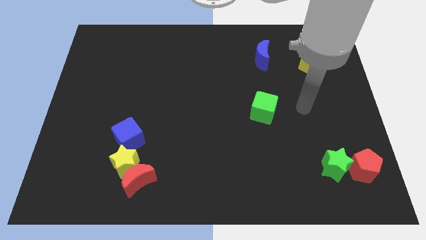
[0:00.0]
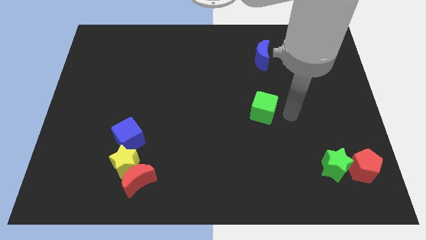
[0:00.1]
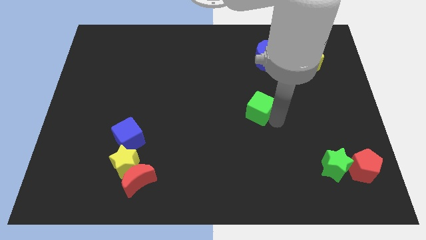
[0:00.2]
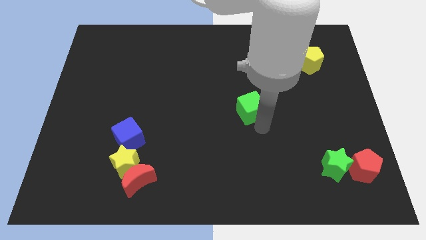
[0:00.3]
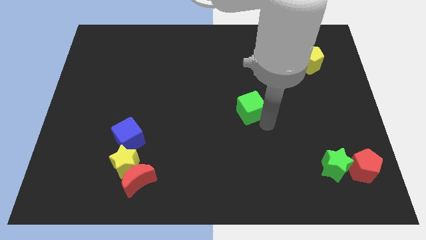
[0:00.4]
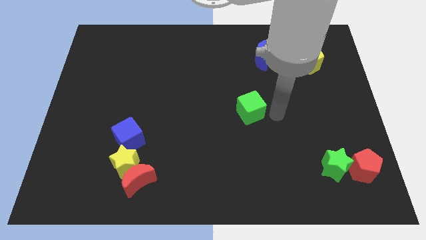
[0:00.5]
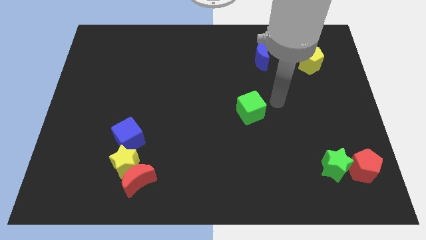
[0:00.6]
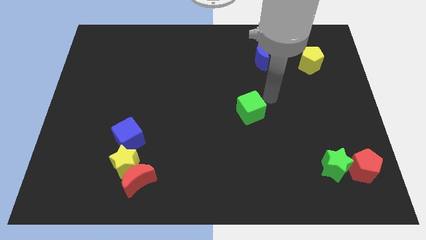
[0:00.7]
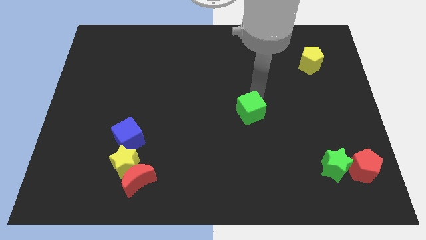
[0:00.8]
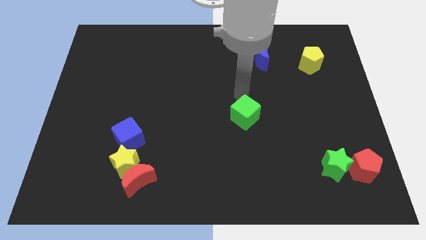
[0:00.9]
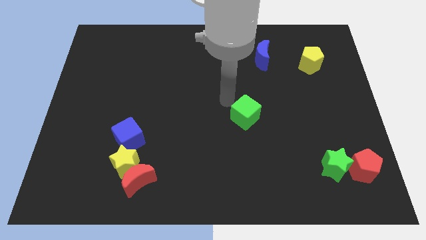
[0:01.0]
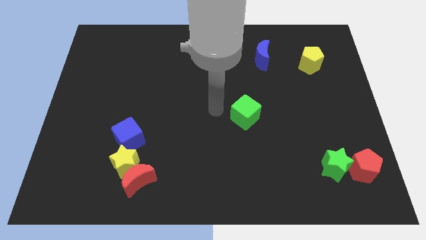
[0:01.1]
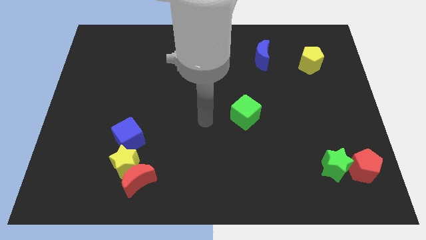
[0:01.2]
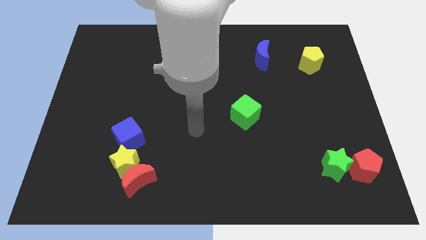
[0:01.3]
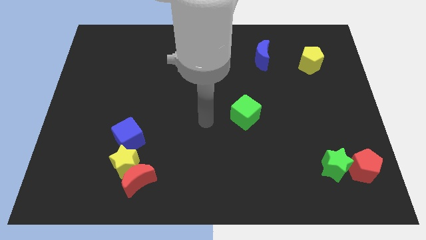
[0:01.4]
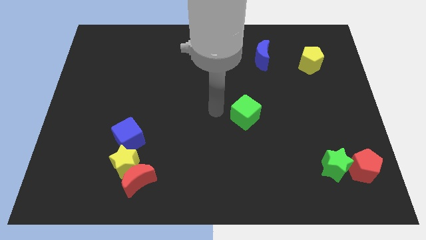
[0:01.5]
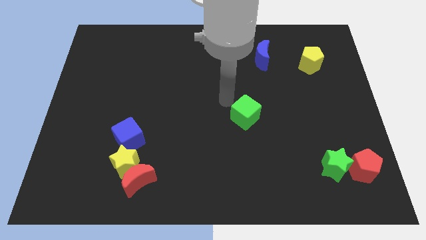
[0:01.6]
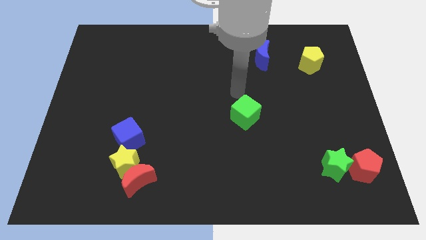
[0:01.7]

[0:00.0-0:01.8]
slide the green cube to the center of the board

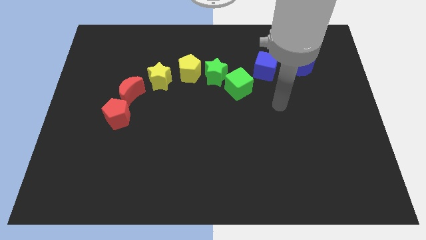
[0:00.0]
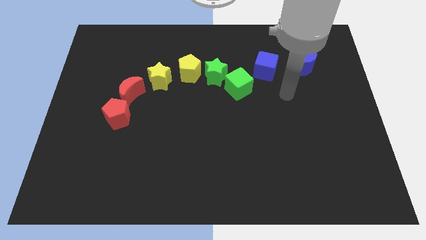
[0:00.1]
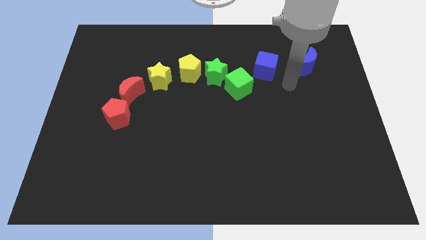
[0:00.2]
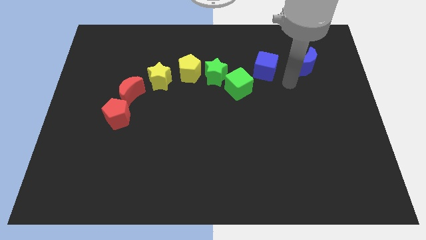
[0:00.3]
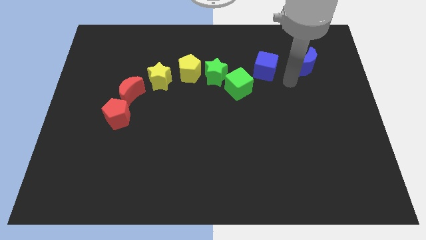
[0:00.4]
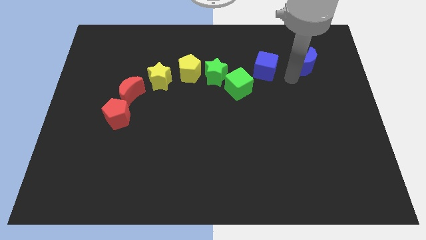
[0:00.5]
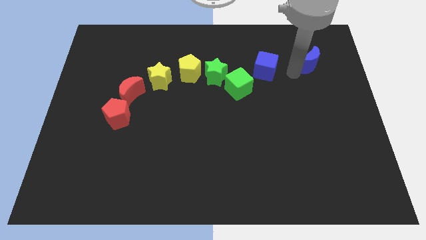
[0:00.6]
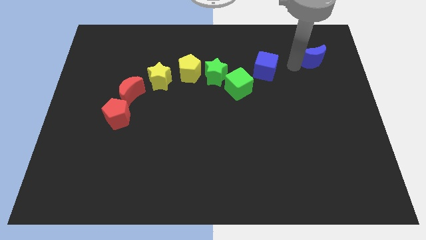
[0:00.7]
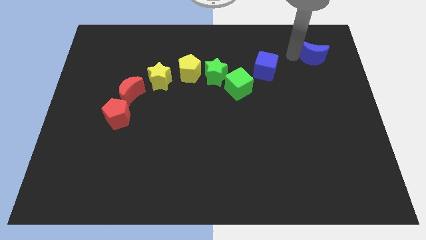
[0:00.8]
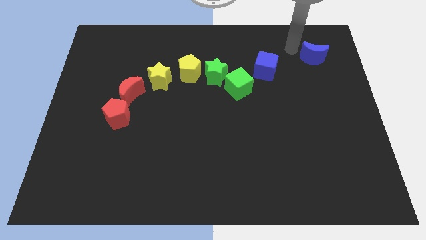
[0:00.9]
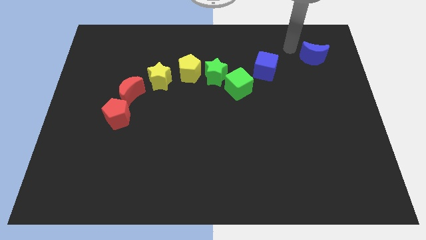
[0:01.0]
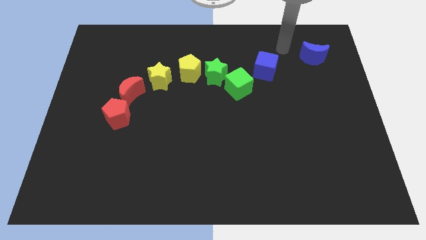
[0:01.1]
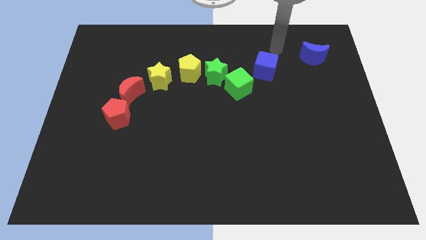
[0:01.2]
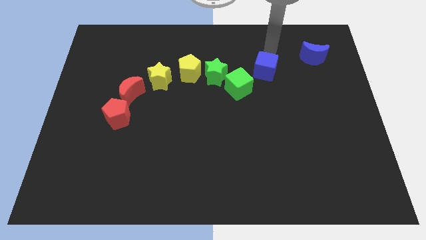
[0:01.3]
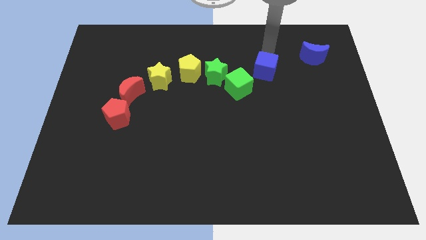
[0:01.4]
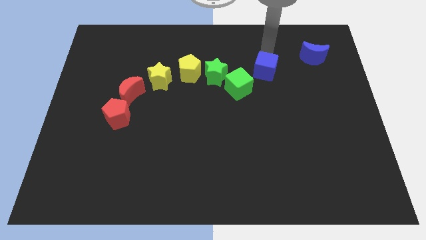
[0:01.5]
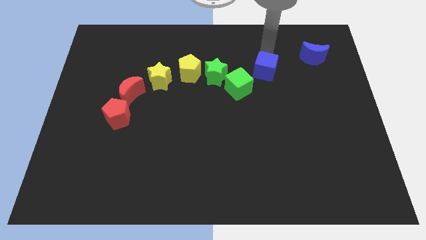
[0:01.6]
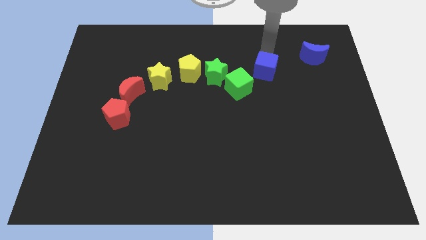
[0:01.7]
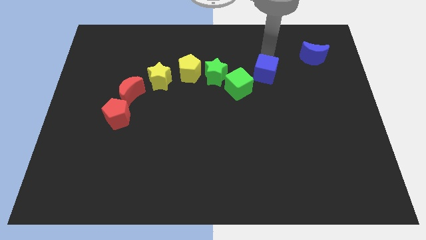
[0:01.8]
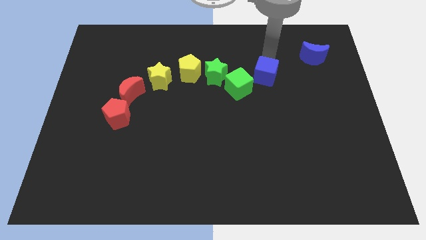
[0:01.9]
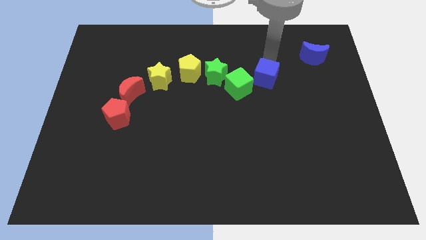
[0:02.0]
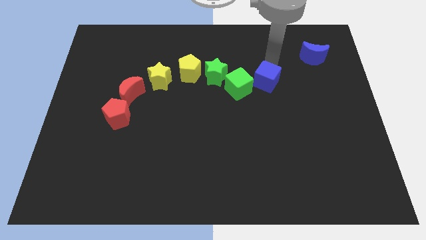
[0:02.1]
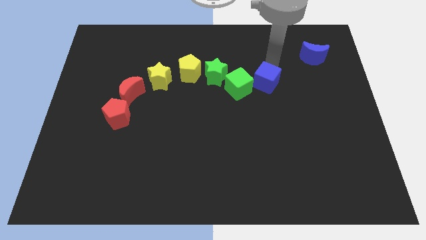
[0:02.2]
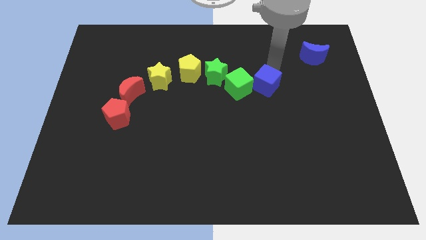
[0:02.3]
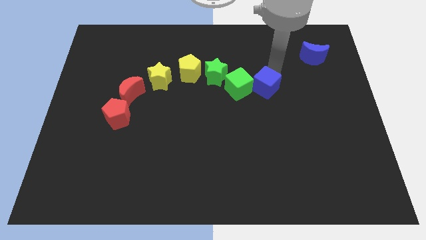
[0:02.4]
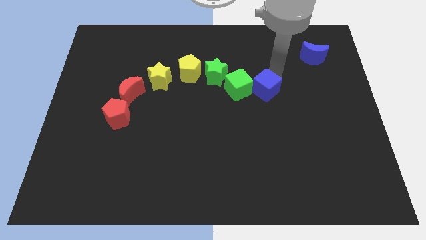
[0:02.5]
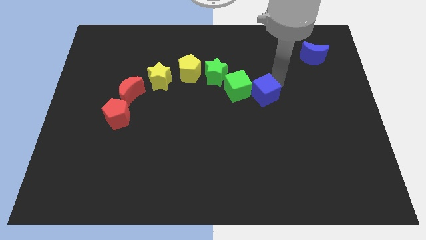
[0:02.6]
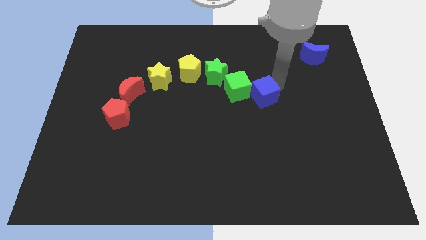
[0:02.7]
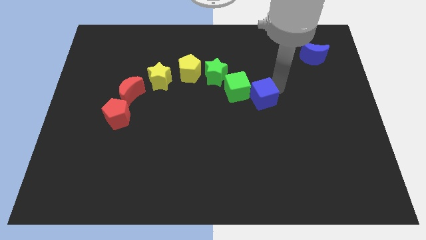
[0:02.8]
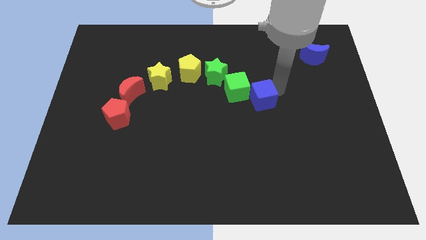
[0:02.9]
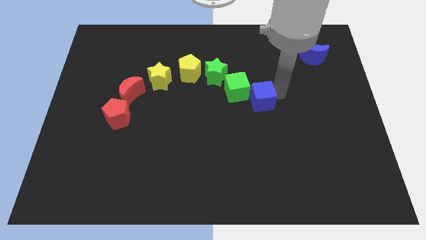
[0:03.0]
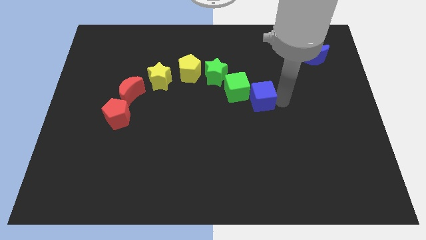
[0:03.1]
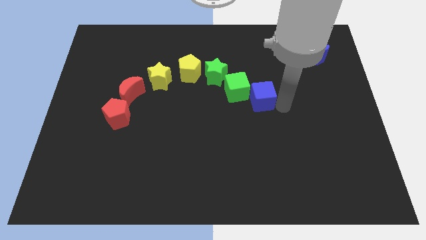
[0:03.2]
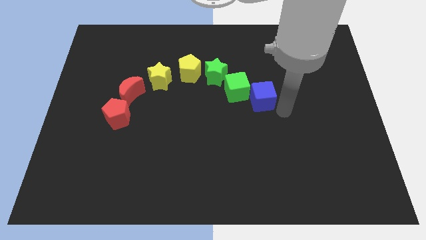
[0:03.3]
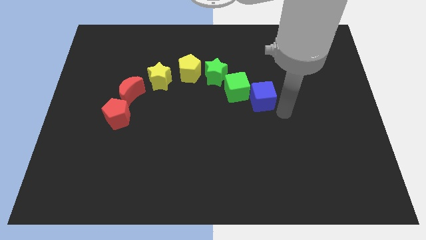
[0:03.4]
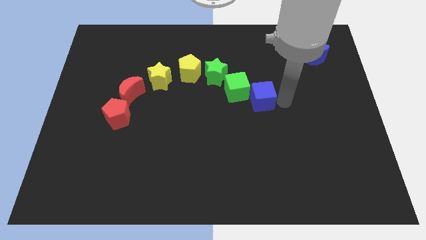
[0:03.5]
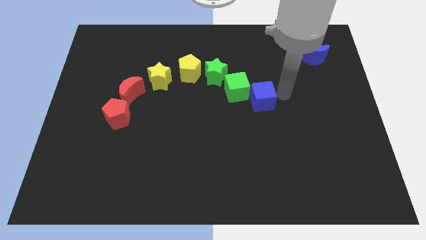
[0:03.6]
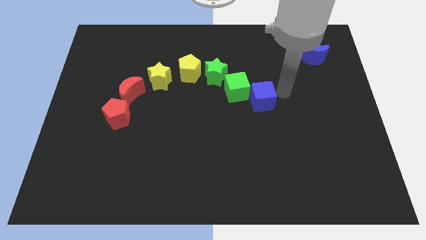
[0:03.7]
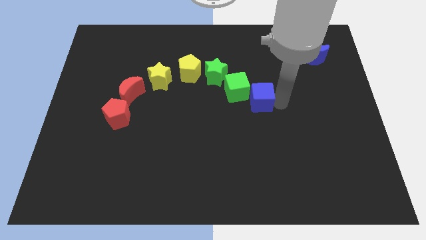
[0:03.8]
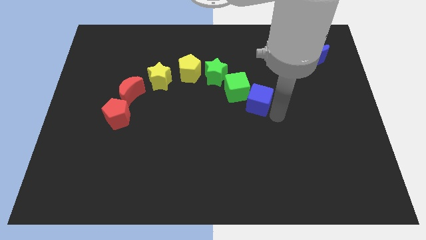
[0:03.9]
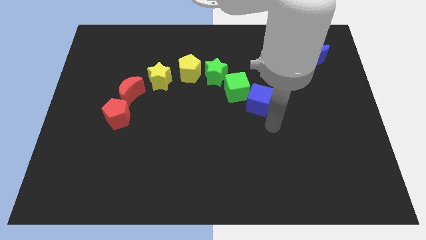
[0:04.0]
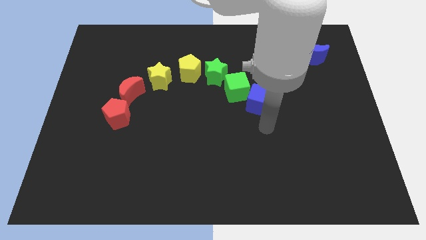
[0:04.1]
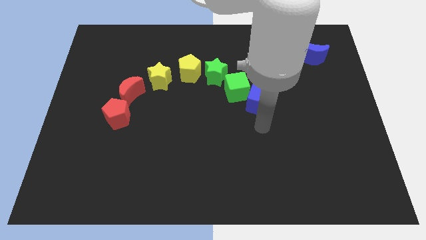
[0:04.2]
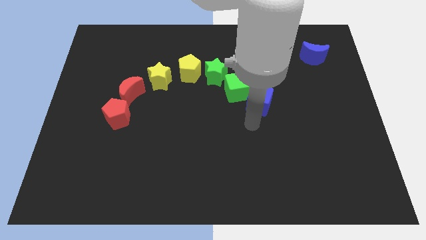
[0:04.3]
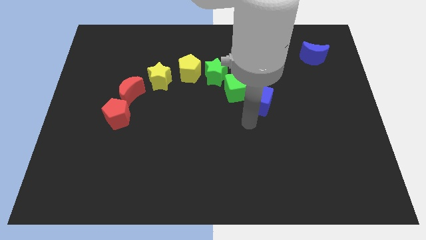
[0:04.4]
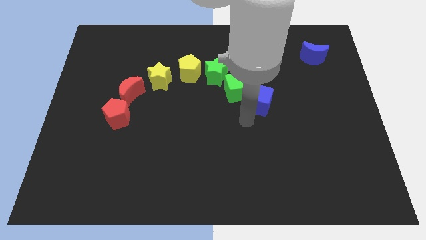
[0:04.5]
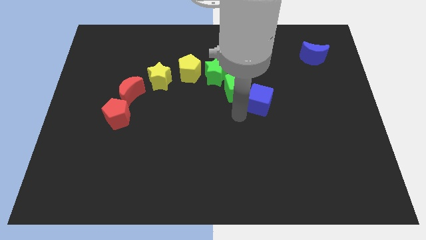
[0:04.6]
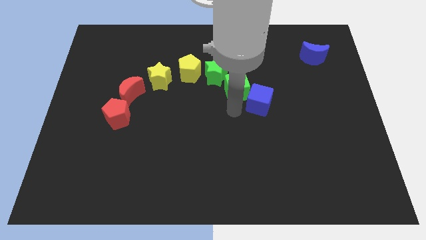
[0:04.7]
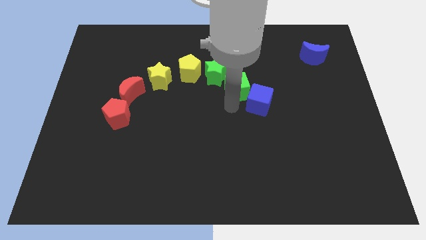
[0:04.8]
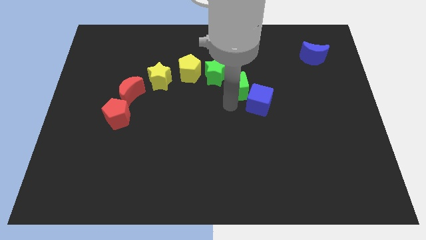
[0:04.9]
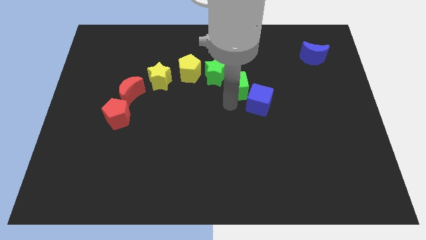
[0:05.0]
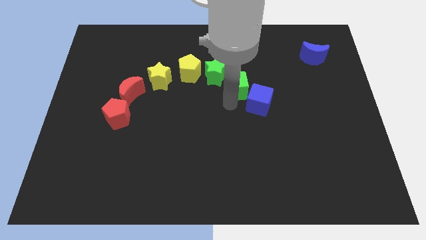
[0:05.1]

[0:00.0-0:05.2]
slide the blue cube to the bottom right side of the green cube

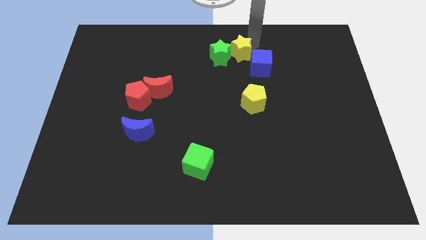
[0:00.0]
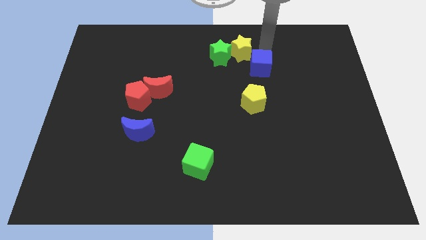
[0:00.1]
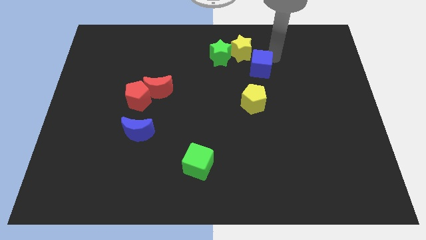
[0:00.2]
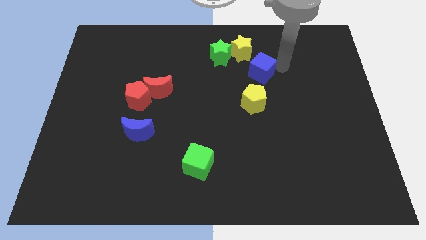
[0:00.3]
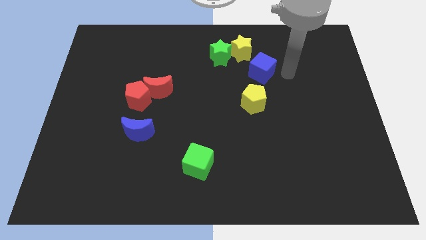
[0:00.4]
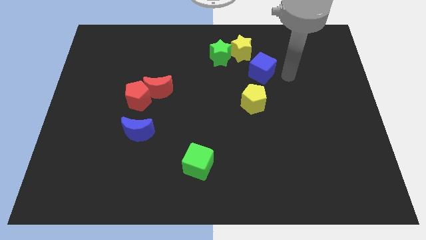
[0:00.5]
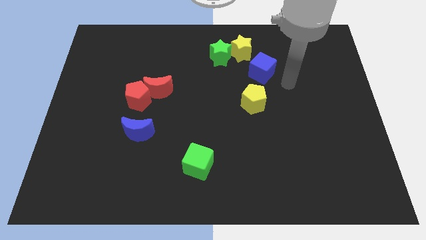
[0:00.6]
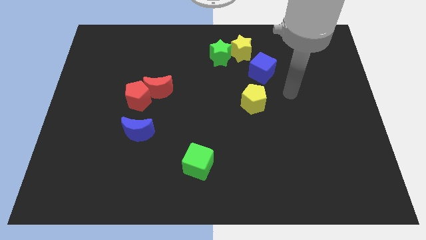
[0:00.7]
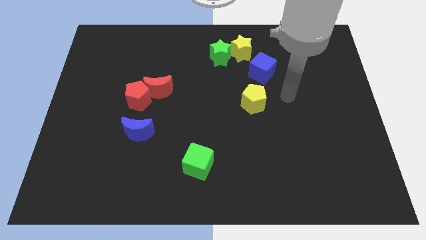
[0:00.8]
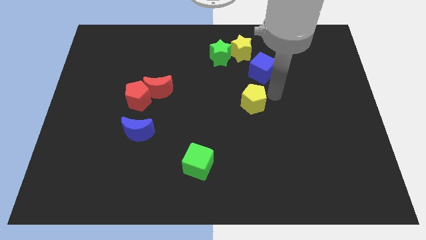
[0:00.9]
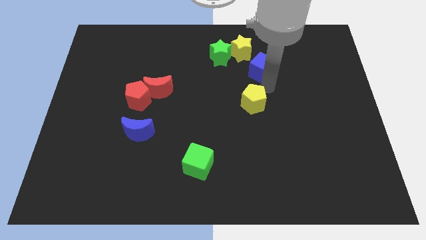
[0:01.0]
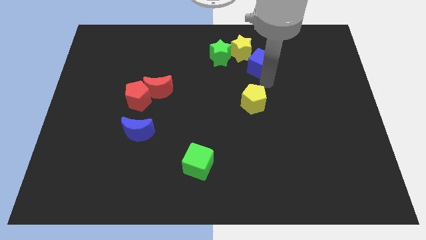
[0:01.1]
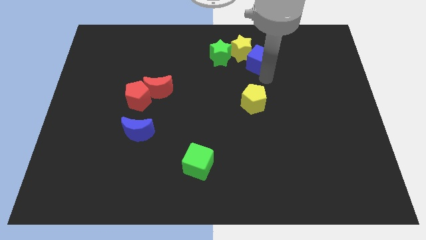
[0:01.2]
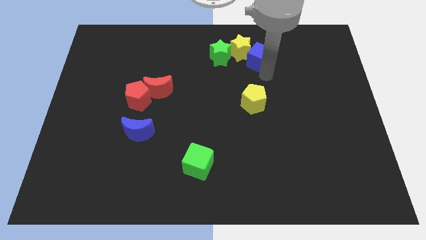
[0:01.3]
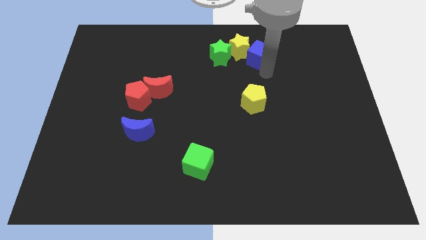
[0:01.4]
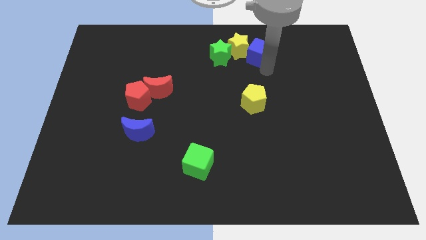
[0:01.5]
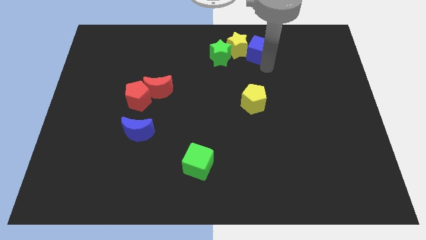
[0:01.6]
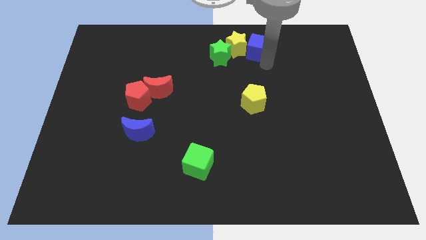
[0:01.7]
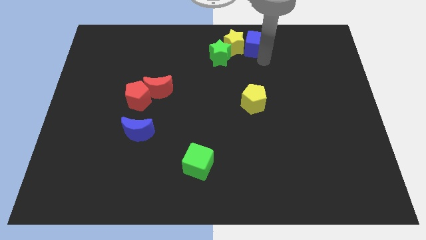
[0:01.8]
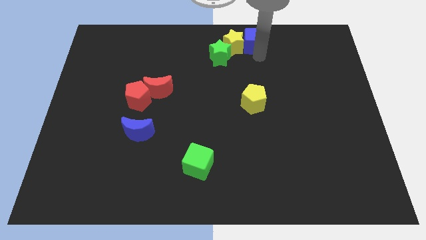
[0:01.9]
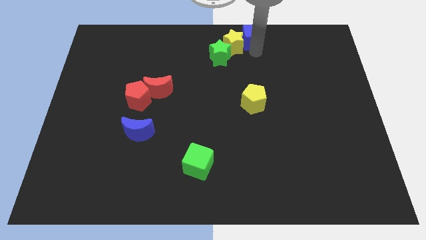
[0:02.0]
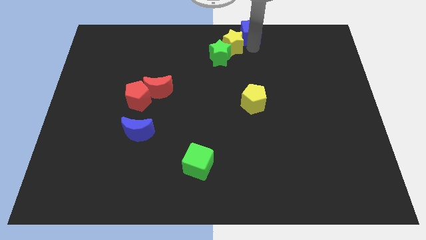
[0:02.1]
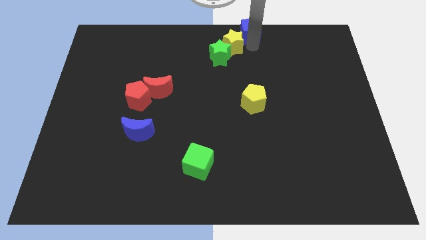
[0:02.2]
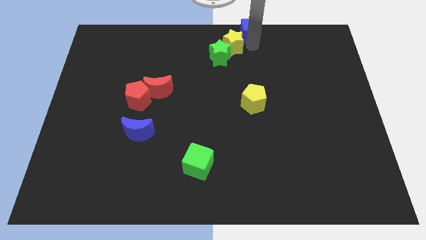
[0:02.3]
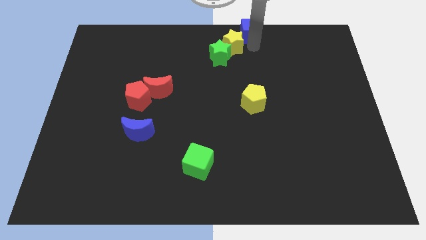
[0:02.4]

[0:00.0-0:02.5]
push the blue cube towards the top middle
